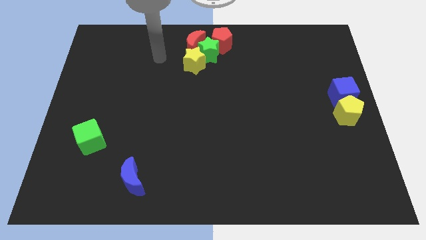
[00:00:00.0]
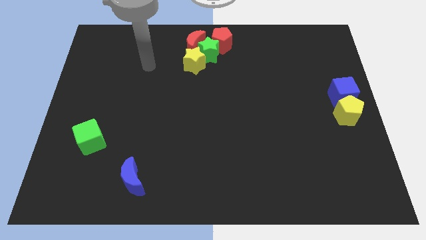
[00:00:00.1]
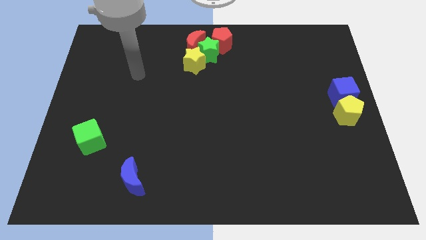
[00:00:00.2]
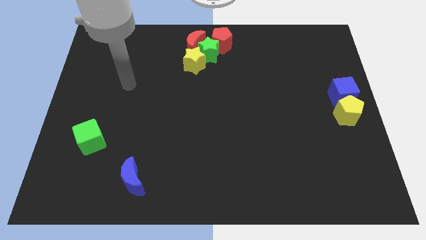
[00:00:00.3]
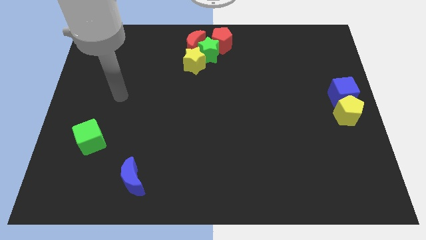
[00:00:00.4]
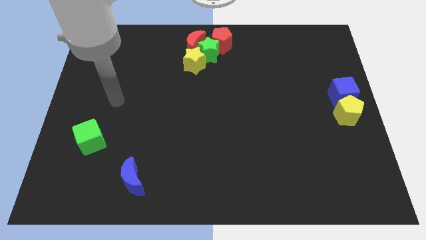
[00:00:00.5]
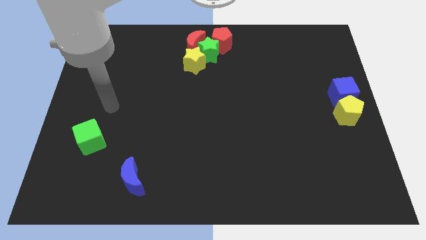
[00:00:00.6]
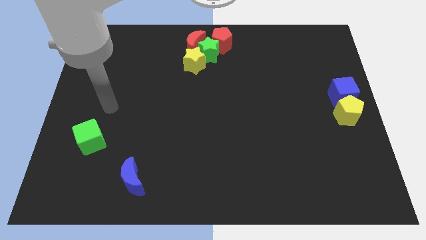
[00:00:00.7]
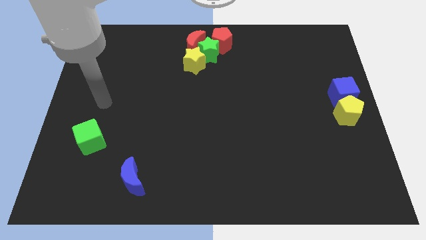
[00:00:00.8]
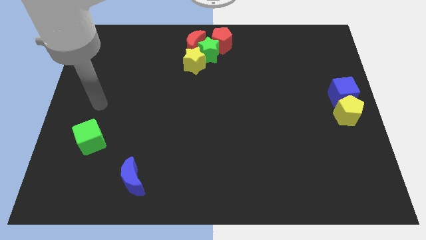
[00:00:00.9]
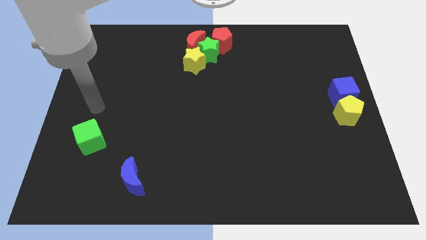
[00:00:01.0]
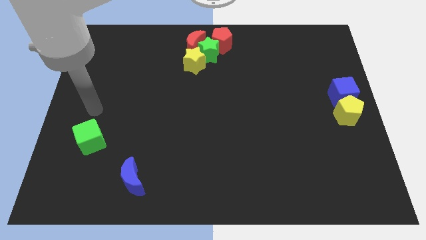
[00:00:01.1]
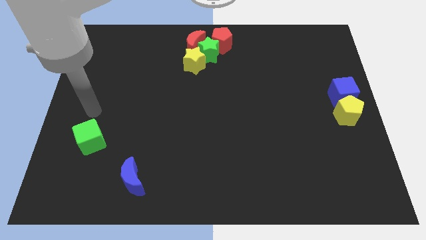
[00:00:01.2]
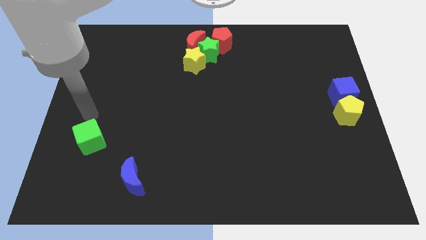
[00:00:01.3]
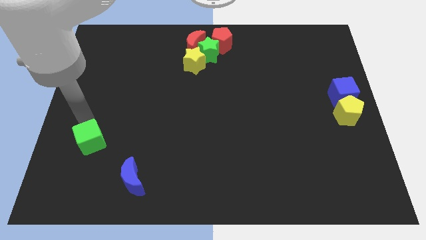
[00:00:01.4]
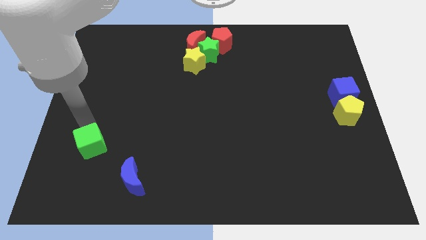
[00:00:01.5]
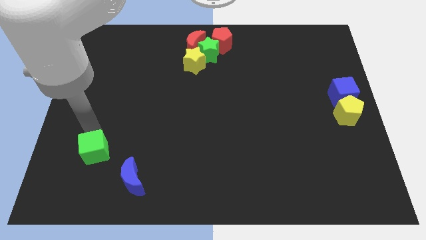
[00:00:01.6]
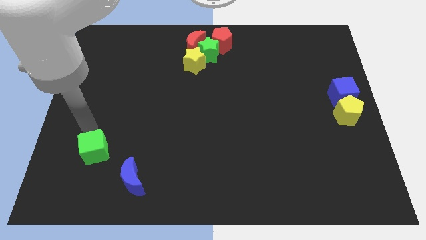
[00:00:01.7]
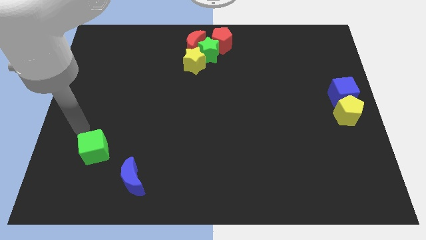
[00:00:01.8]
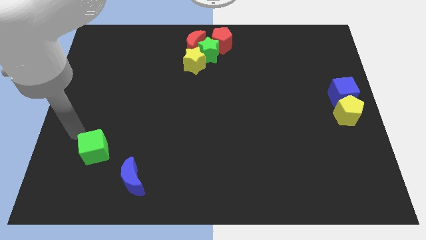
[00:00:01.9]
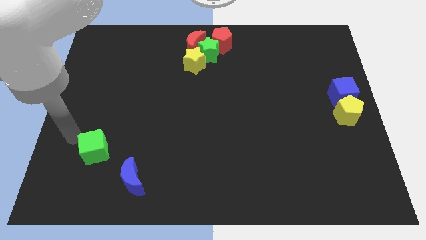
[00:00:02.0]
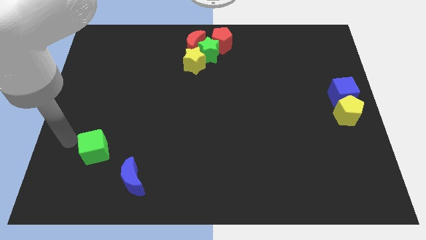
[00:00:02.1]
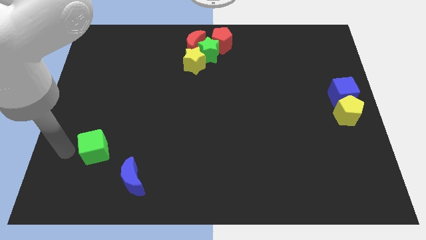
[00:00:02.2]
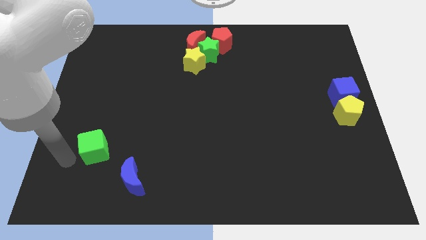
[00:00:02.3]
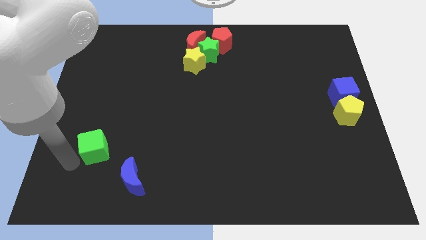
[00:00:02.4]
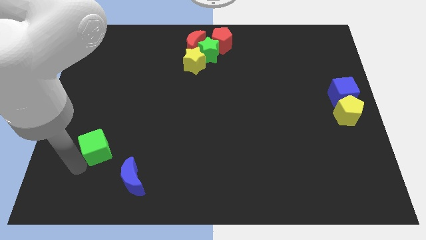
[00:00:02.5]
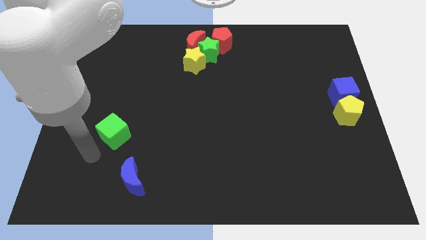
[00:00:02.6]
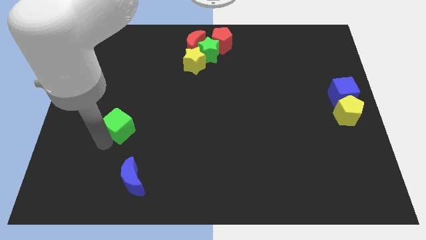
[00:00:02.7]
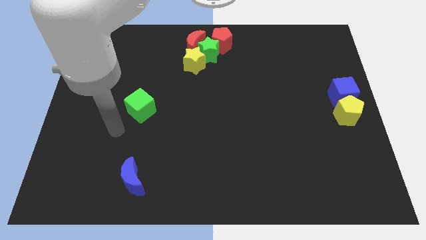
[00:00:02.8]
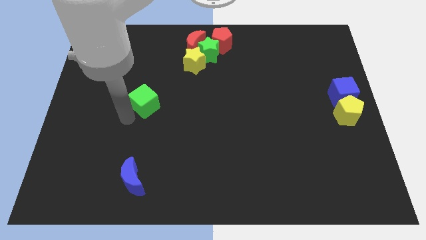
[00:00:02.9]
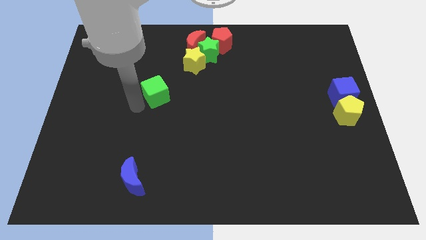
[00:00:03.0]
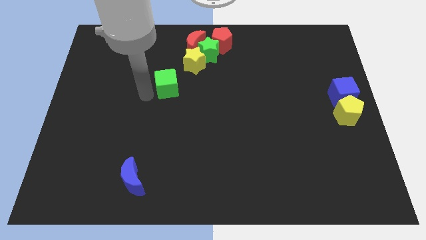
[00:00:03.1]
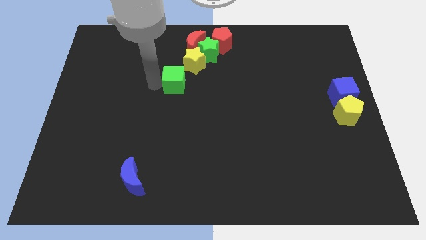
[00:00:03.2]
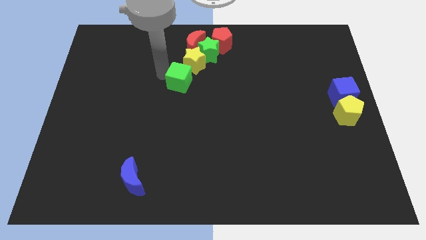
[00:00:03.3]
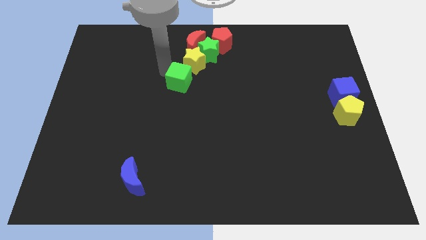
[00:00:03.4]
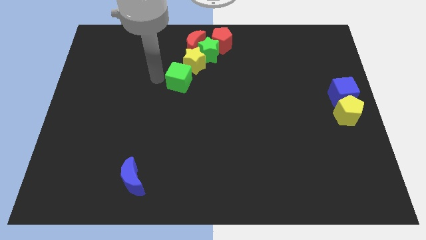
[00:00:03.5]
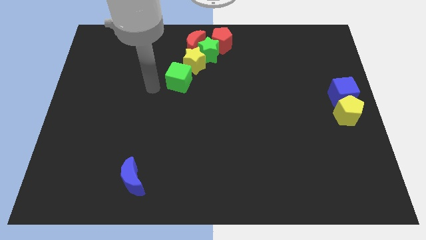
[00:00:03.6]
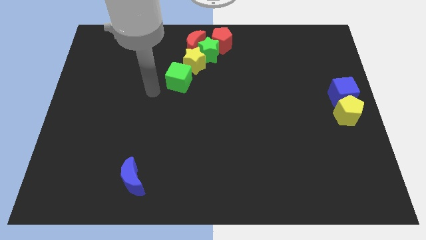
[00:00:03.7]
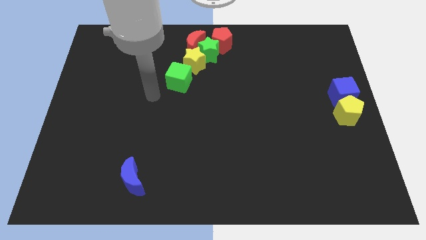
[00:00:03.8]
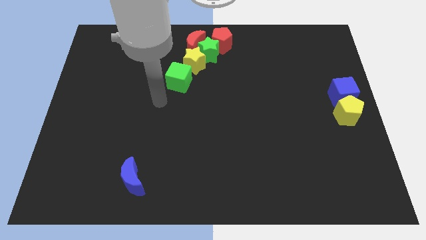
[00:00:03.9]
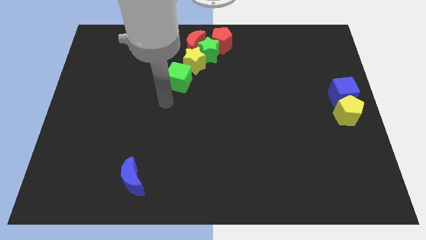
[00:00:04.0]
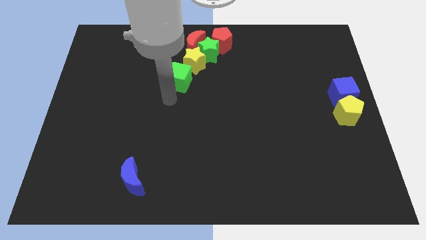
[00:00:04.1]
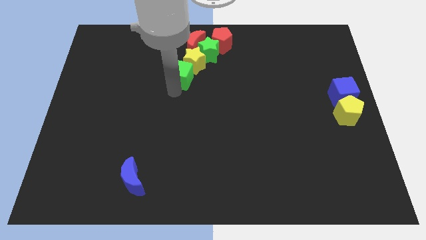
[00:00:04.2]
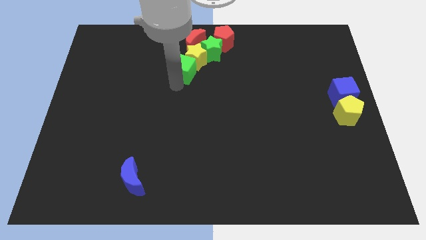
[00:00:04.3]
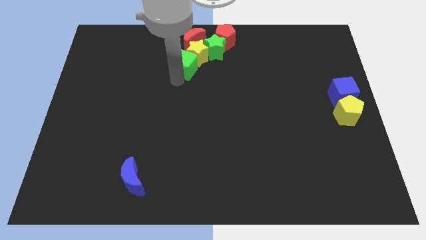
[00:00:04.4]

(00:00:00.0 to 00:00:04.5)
slide the green cube into the bottom side of the yellow star

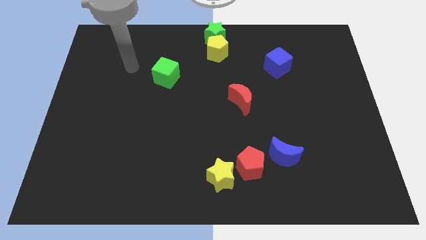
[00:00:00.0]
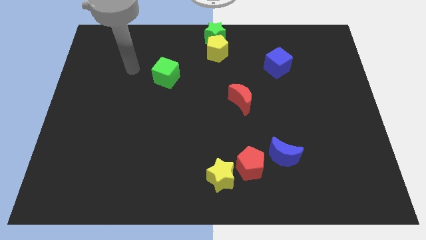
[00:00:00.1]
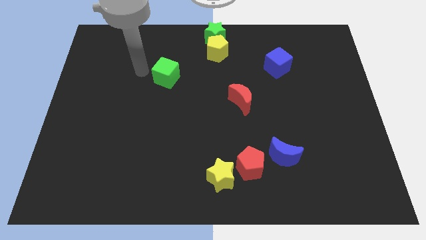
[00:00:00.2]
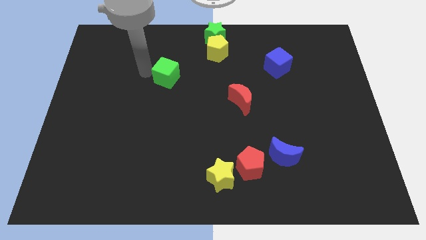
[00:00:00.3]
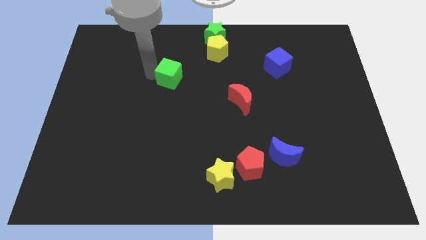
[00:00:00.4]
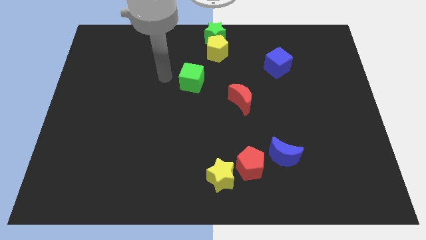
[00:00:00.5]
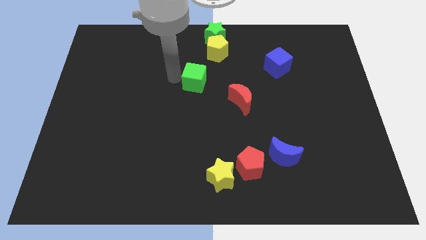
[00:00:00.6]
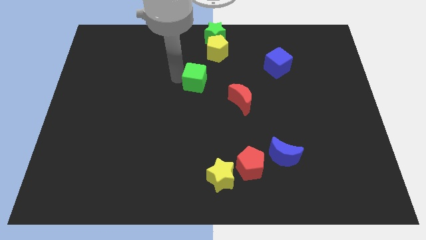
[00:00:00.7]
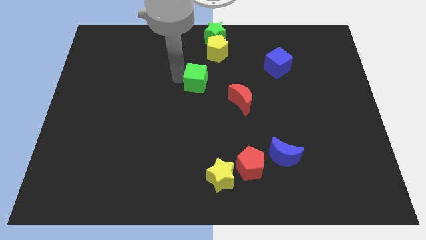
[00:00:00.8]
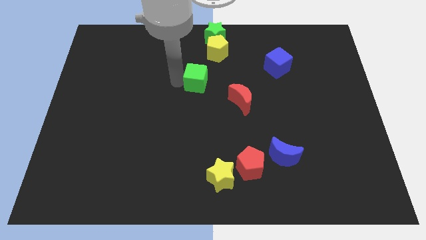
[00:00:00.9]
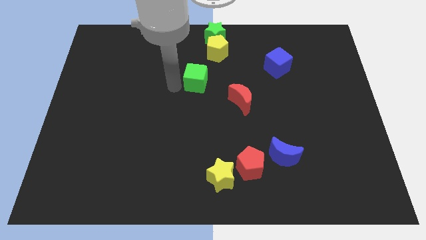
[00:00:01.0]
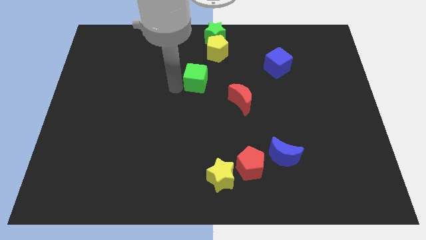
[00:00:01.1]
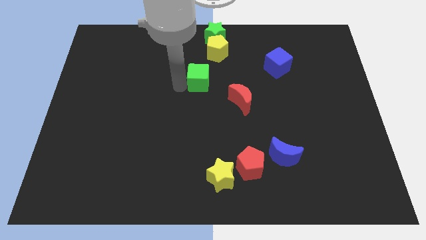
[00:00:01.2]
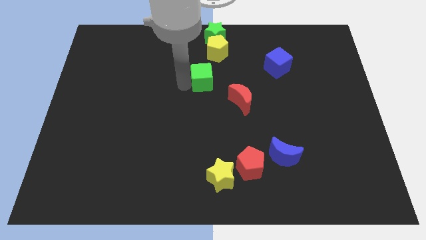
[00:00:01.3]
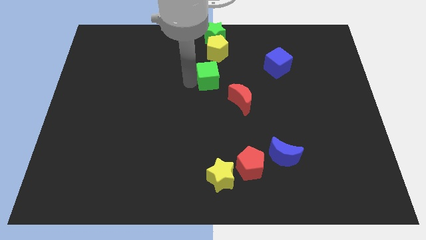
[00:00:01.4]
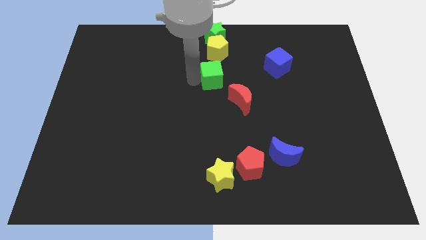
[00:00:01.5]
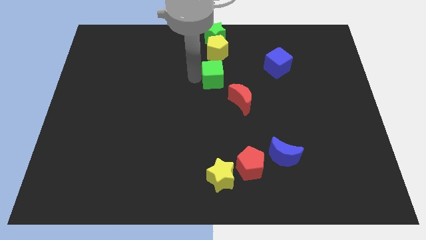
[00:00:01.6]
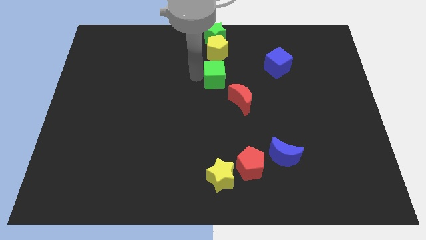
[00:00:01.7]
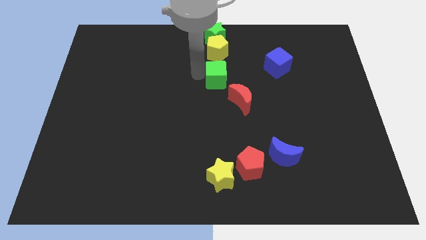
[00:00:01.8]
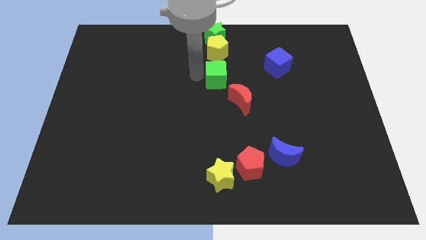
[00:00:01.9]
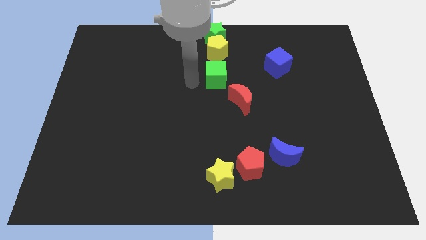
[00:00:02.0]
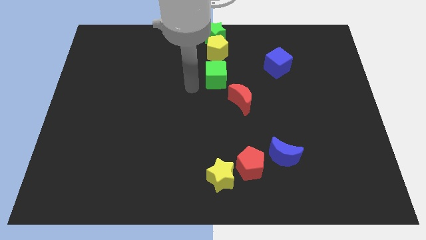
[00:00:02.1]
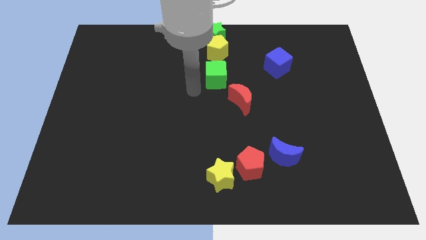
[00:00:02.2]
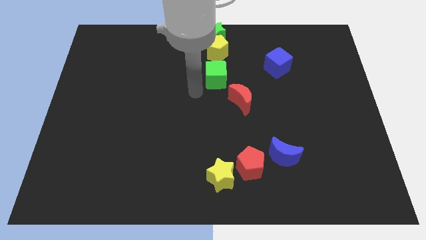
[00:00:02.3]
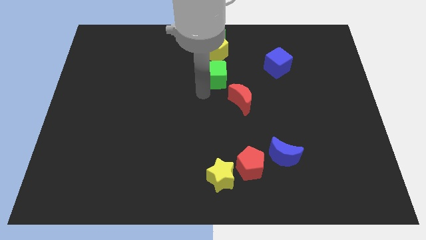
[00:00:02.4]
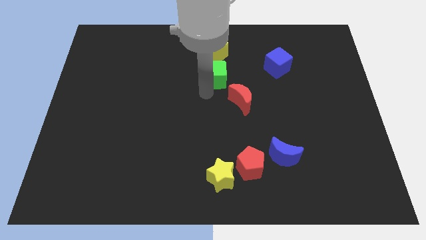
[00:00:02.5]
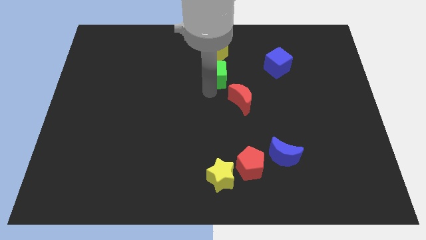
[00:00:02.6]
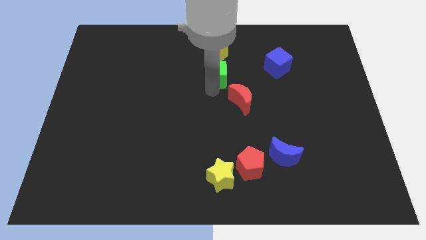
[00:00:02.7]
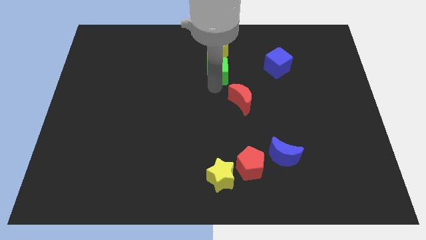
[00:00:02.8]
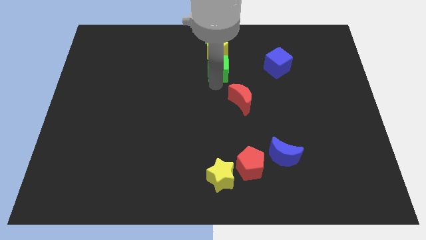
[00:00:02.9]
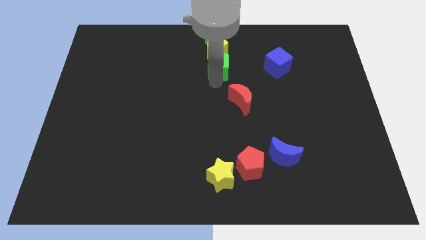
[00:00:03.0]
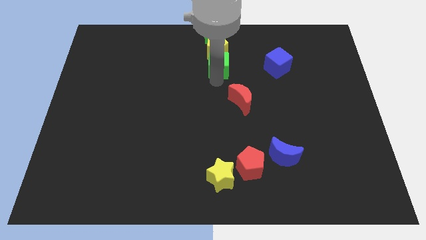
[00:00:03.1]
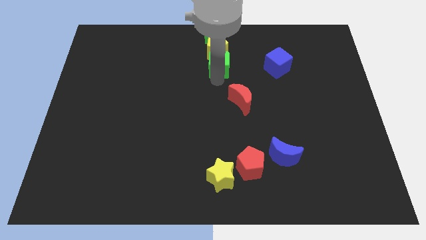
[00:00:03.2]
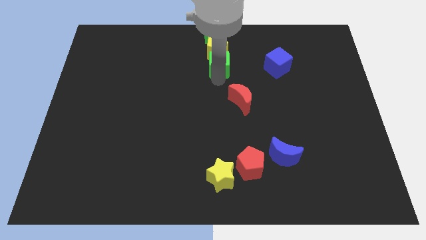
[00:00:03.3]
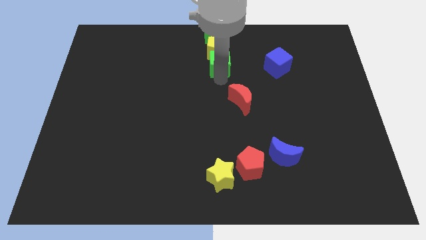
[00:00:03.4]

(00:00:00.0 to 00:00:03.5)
move the green cube close to the yellow pentagon

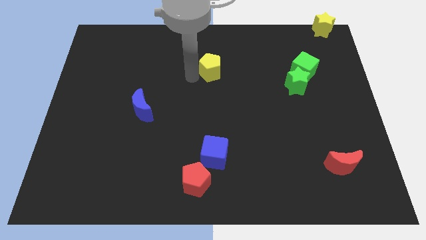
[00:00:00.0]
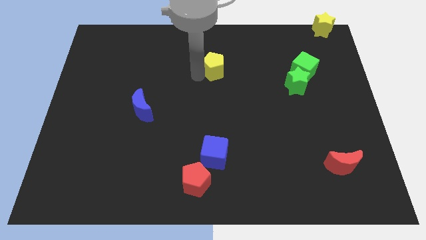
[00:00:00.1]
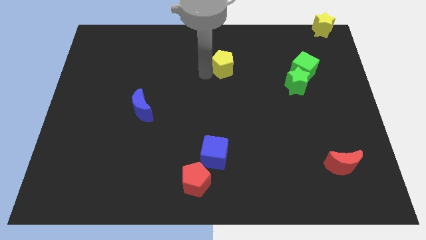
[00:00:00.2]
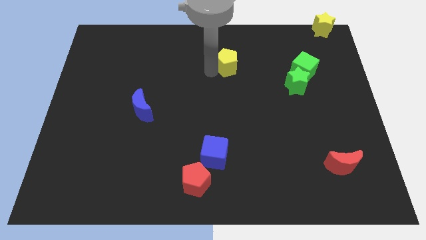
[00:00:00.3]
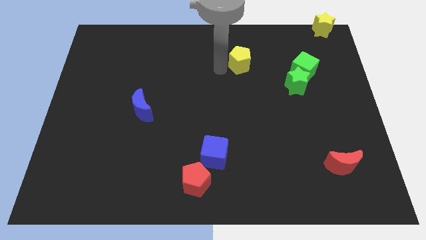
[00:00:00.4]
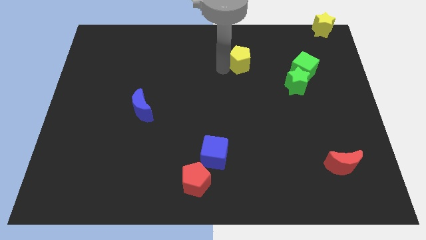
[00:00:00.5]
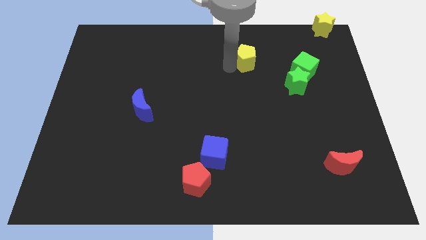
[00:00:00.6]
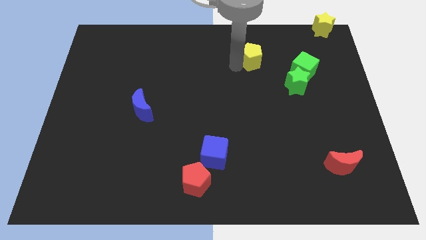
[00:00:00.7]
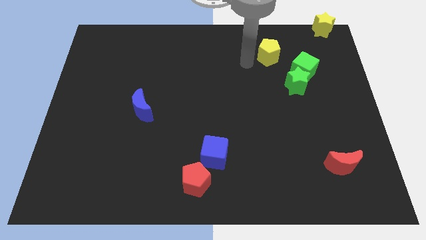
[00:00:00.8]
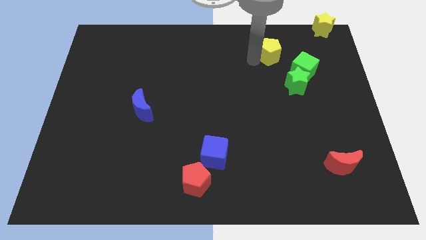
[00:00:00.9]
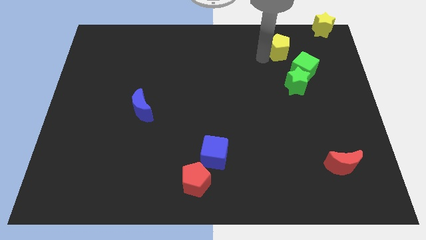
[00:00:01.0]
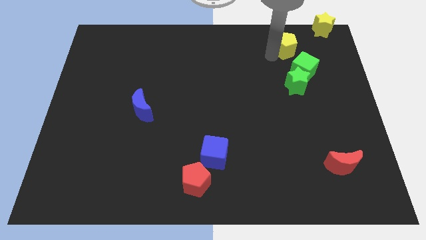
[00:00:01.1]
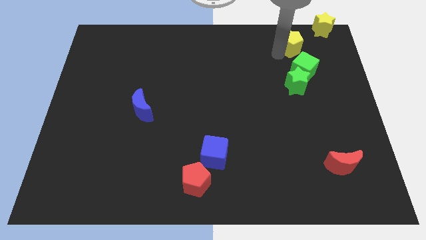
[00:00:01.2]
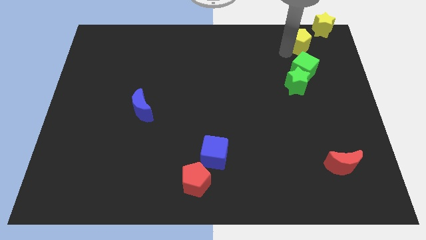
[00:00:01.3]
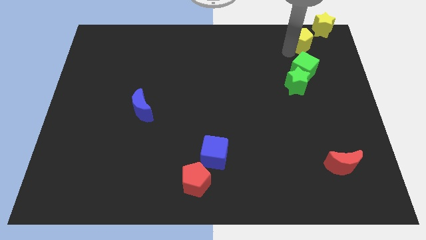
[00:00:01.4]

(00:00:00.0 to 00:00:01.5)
place the yellow pentagon above the green cube
